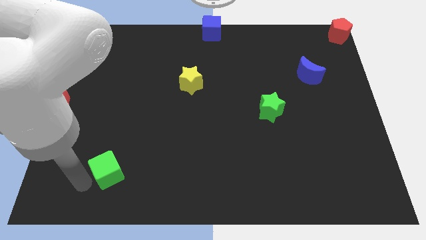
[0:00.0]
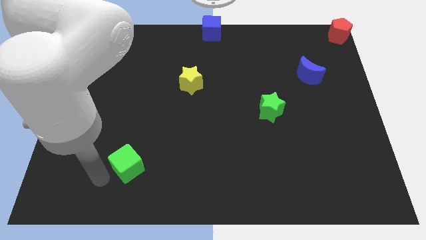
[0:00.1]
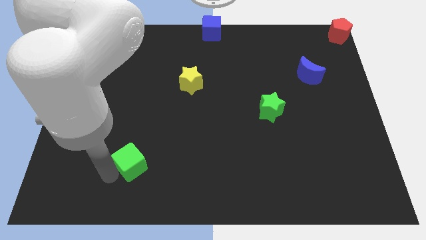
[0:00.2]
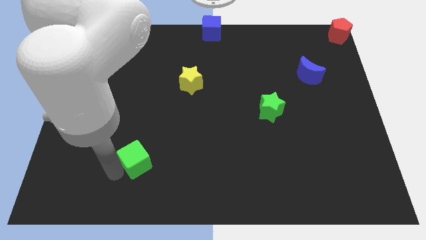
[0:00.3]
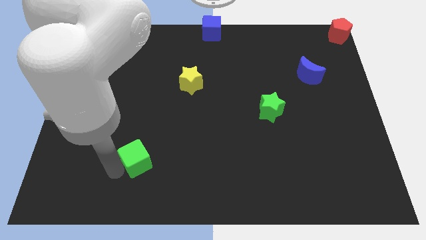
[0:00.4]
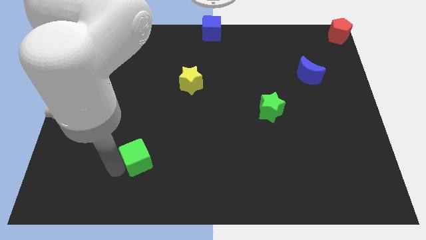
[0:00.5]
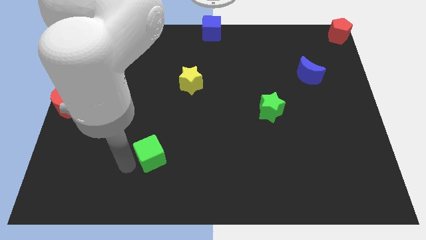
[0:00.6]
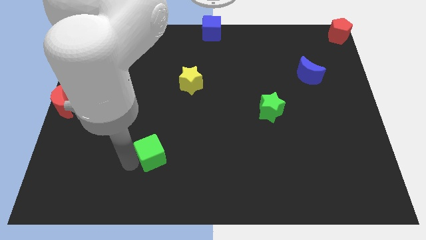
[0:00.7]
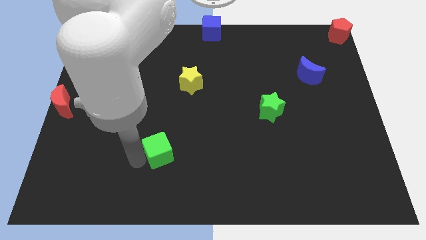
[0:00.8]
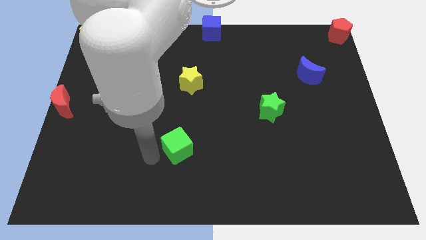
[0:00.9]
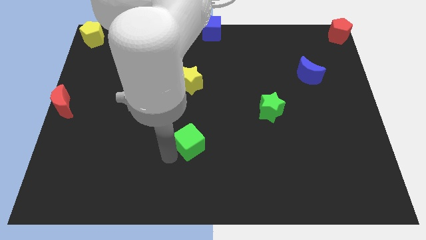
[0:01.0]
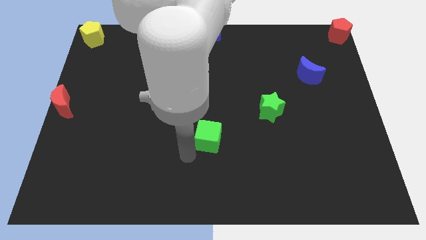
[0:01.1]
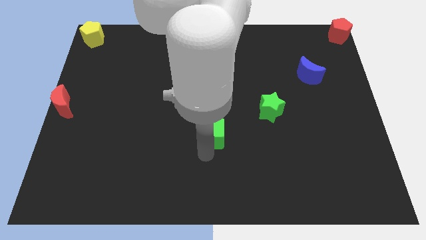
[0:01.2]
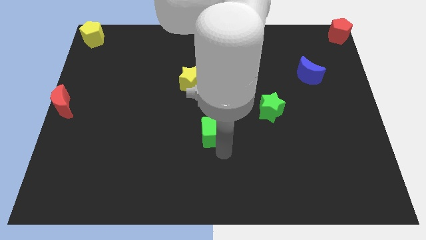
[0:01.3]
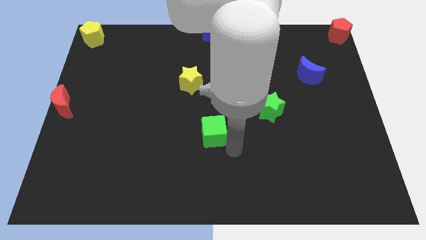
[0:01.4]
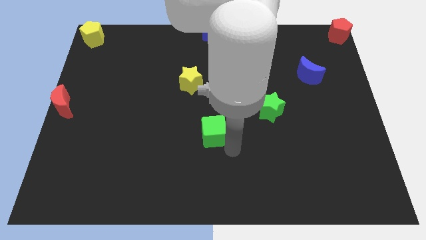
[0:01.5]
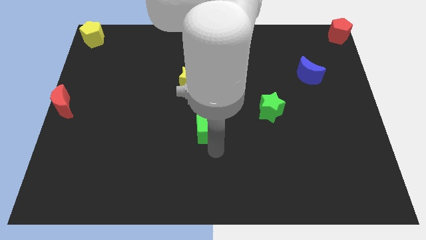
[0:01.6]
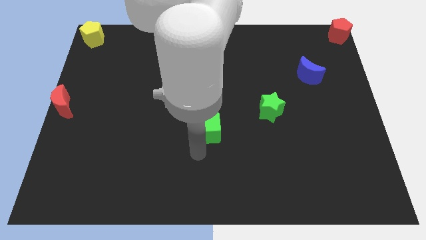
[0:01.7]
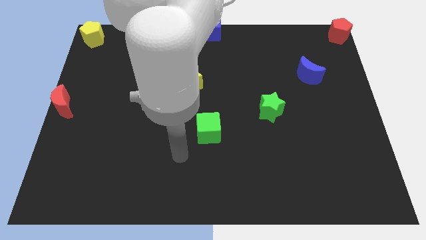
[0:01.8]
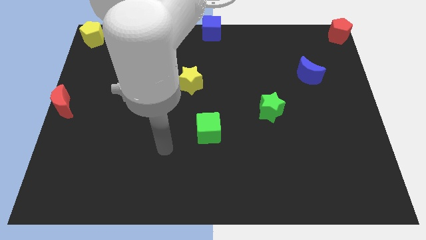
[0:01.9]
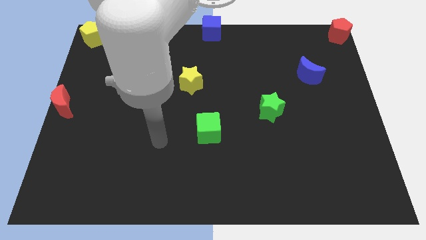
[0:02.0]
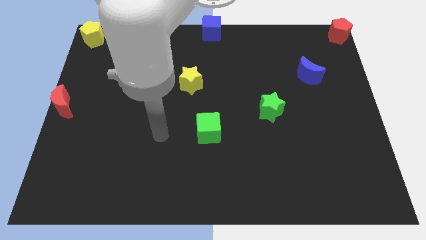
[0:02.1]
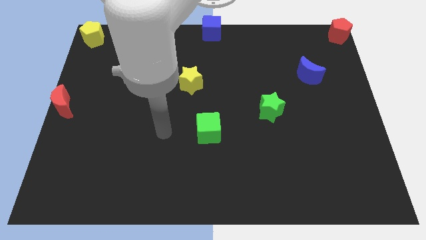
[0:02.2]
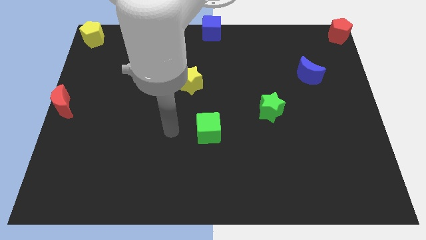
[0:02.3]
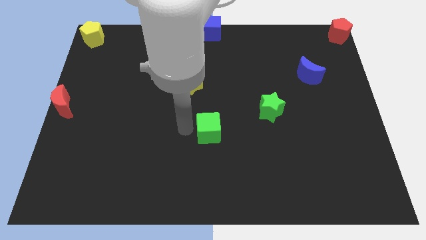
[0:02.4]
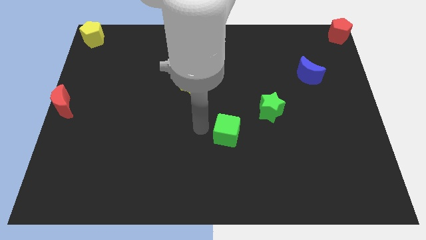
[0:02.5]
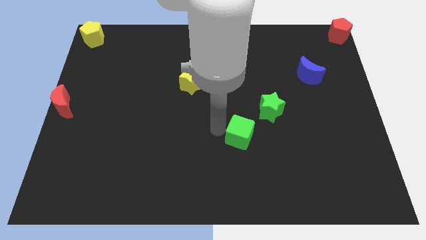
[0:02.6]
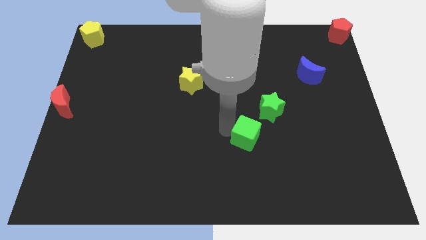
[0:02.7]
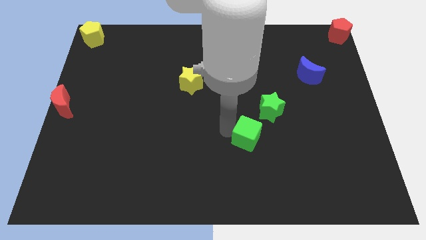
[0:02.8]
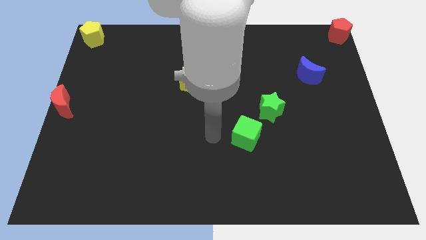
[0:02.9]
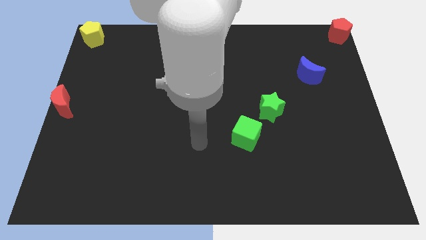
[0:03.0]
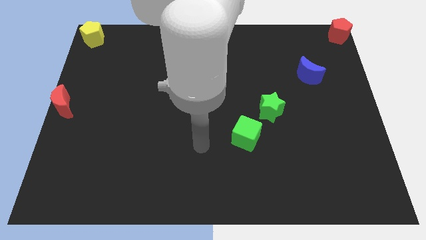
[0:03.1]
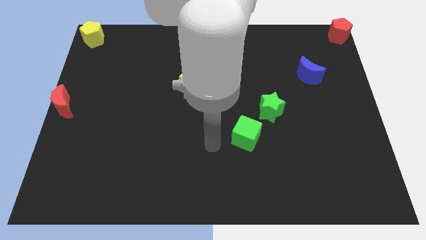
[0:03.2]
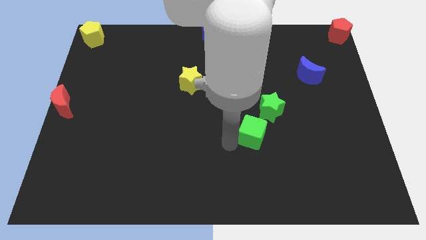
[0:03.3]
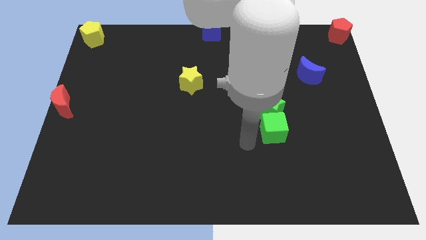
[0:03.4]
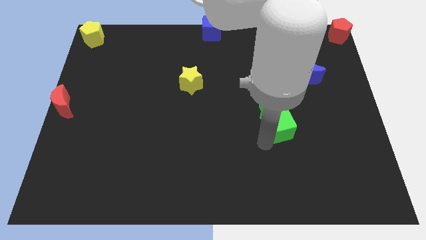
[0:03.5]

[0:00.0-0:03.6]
push the green cube to the bottom of the green star

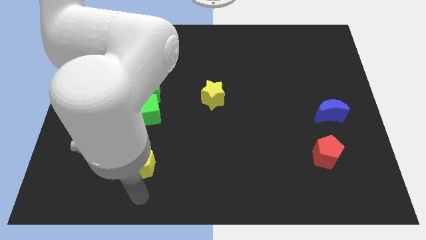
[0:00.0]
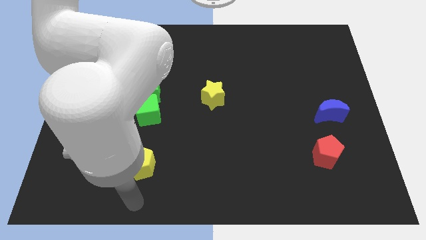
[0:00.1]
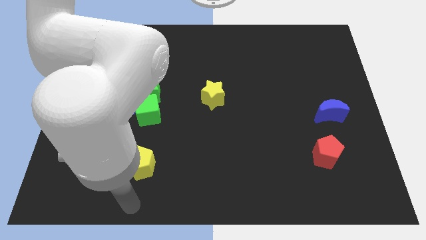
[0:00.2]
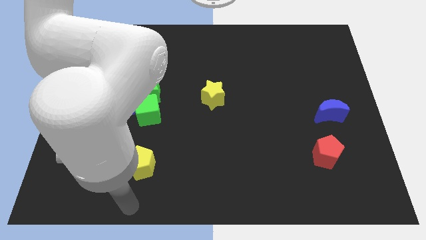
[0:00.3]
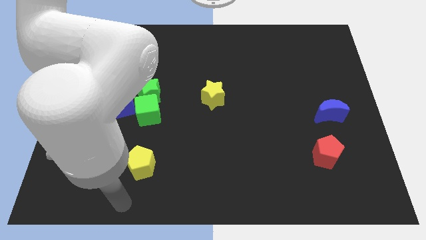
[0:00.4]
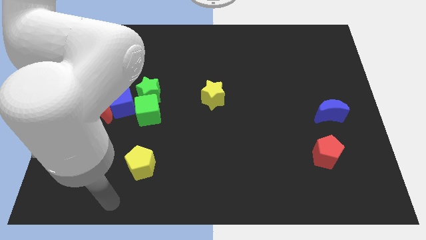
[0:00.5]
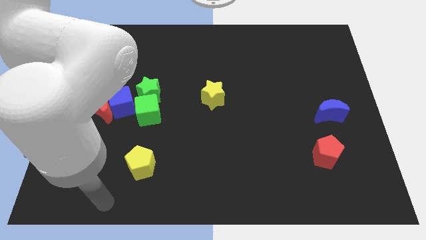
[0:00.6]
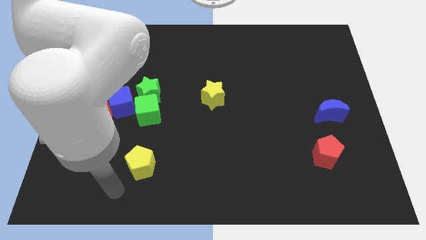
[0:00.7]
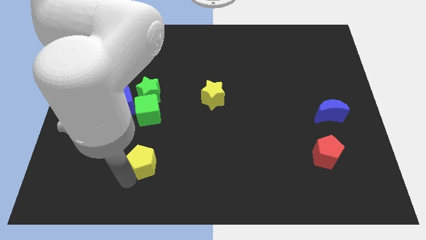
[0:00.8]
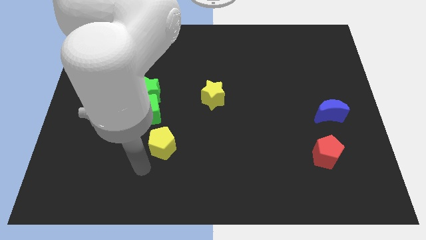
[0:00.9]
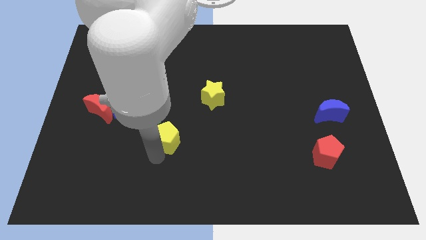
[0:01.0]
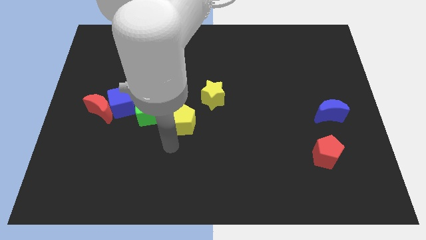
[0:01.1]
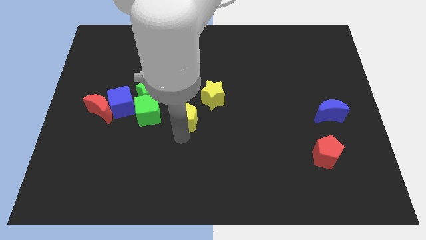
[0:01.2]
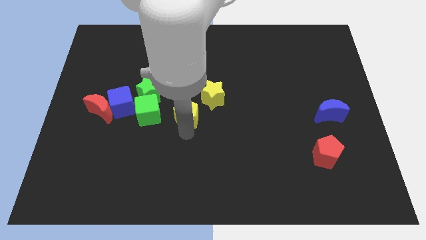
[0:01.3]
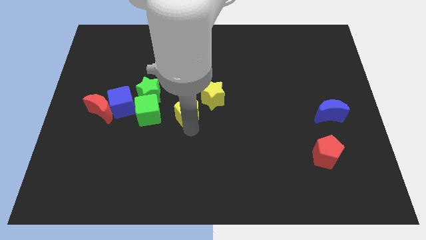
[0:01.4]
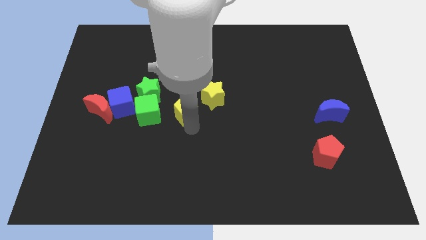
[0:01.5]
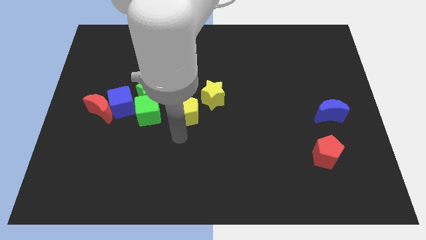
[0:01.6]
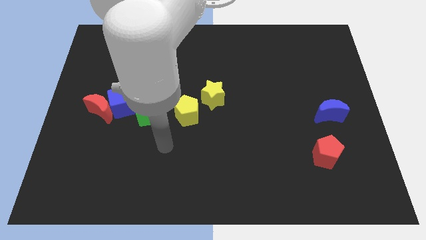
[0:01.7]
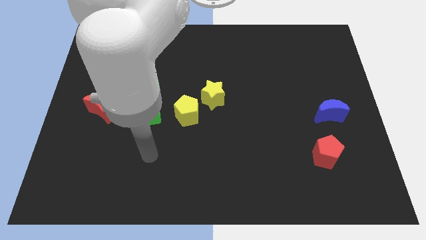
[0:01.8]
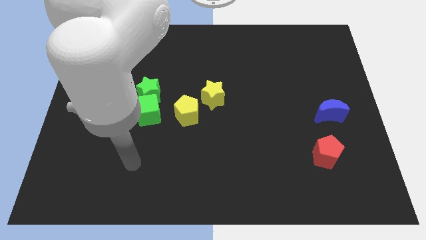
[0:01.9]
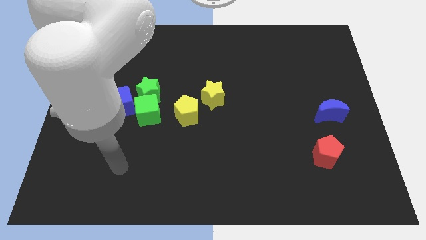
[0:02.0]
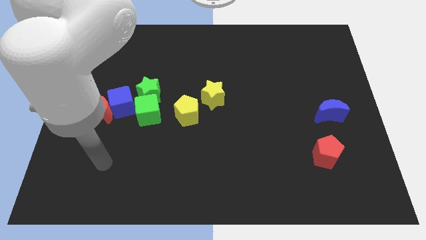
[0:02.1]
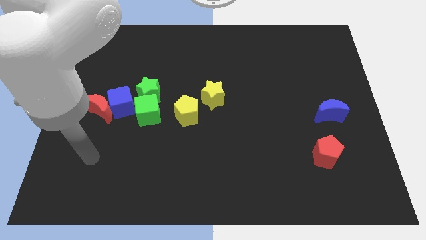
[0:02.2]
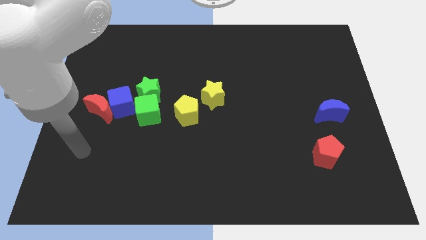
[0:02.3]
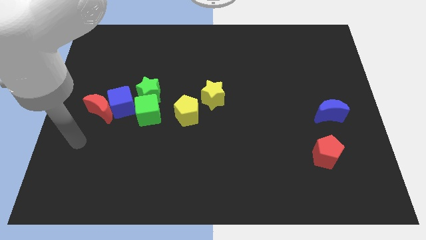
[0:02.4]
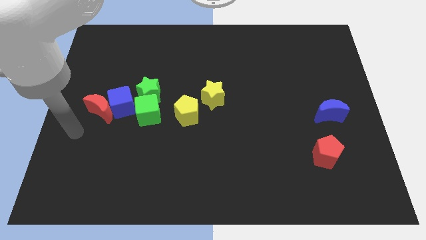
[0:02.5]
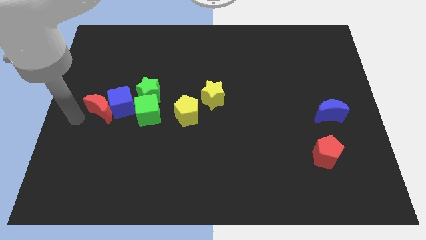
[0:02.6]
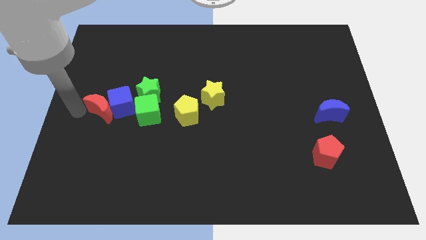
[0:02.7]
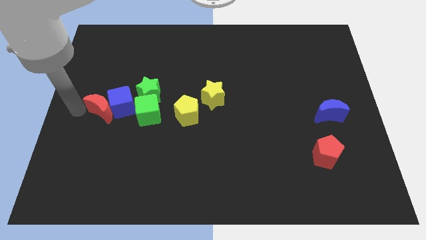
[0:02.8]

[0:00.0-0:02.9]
push the yellow pentagon close to the yellow star

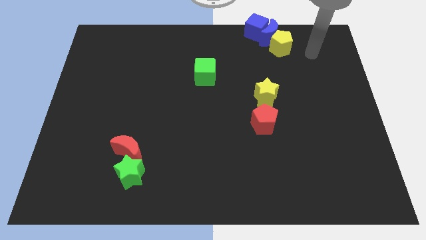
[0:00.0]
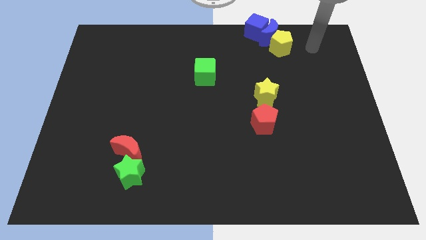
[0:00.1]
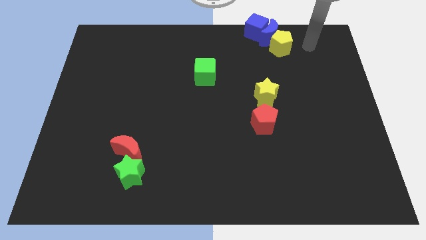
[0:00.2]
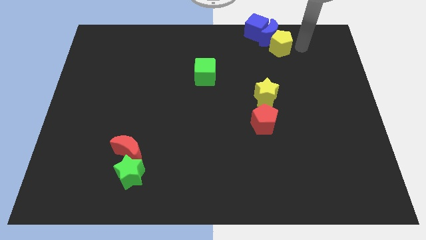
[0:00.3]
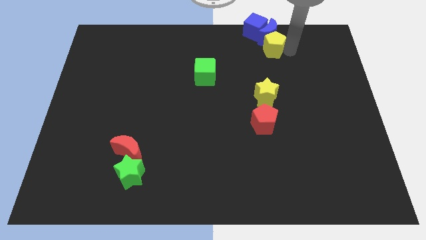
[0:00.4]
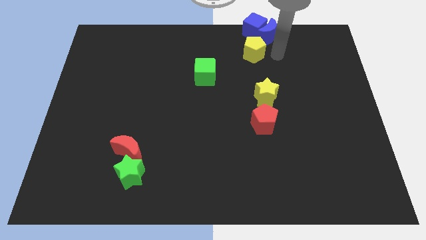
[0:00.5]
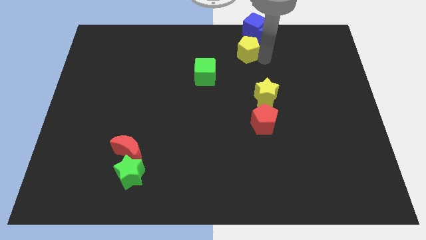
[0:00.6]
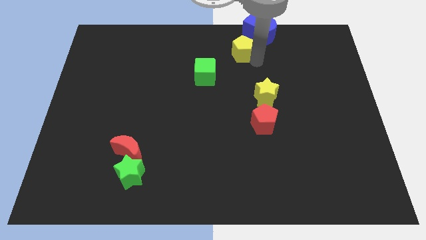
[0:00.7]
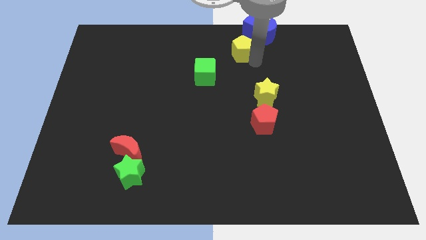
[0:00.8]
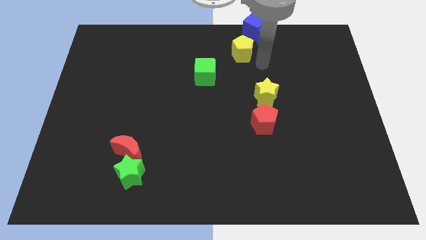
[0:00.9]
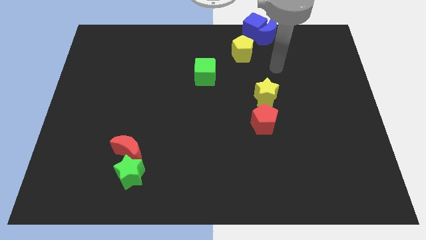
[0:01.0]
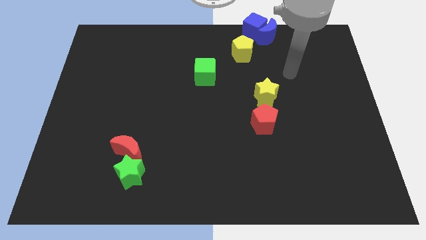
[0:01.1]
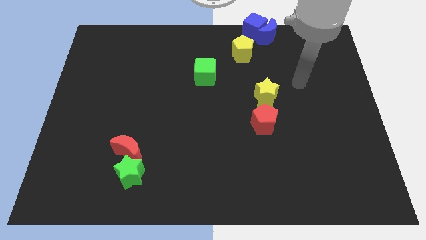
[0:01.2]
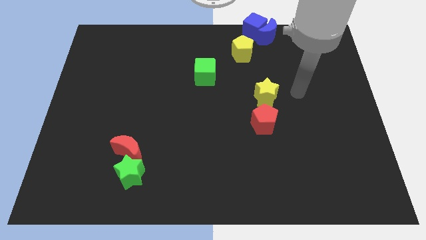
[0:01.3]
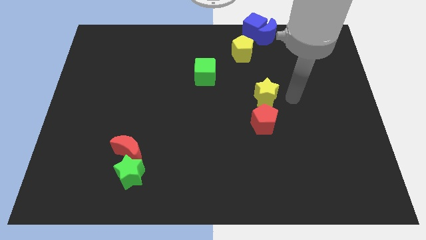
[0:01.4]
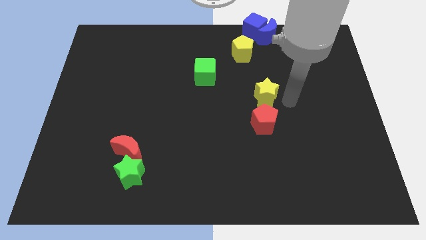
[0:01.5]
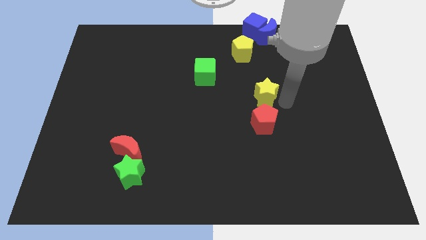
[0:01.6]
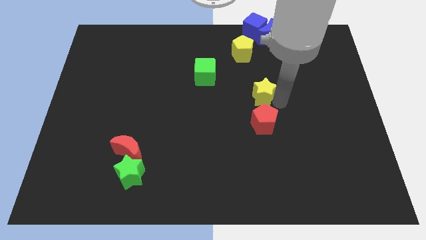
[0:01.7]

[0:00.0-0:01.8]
push the yellow pentagon to the bottom of the blue cube

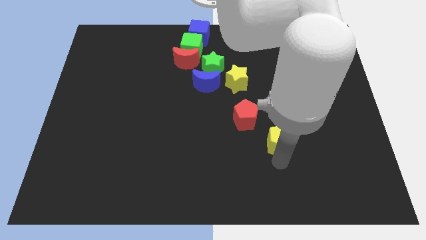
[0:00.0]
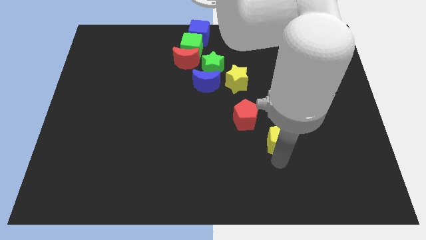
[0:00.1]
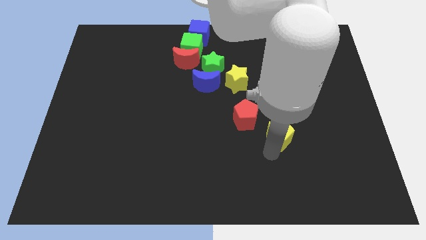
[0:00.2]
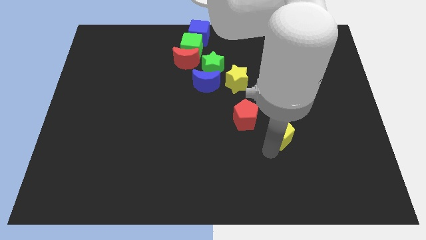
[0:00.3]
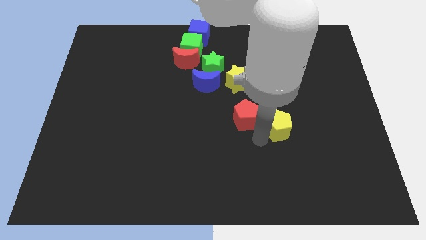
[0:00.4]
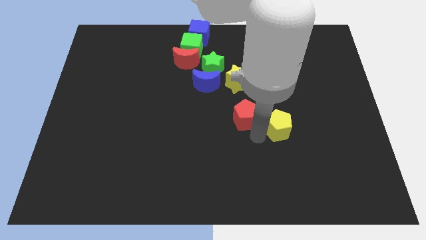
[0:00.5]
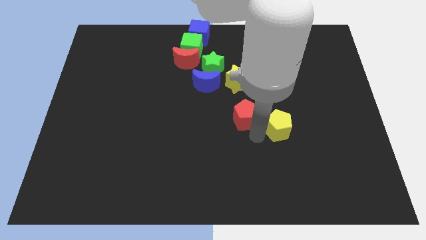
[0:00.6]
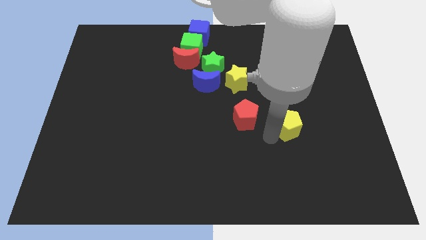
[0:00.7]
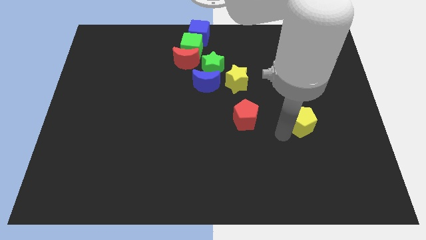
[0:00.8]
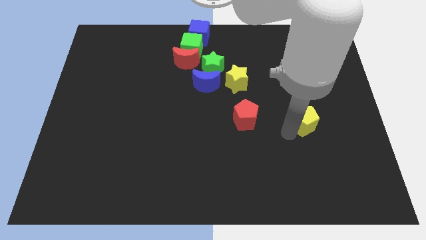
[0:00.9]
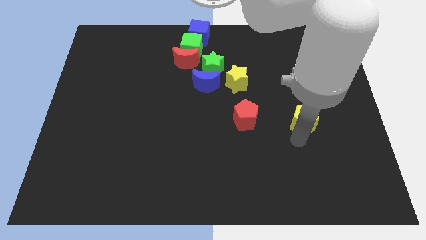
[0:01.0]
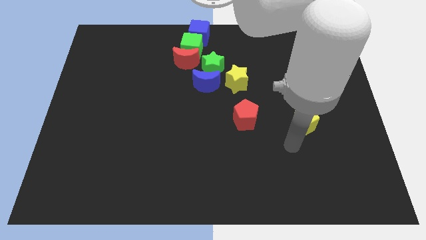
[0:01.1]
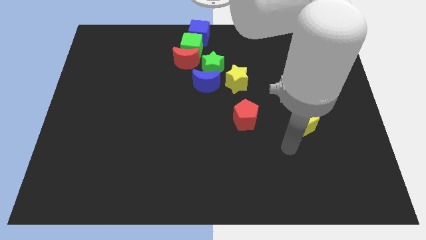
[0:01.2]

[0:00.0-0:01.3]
move the yellow pentagon to the right of the red pentagon
